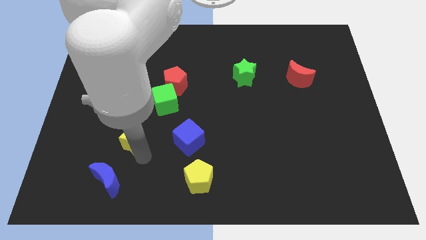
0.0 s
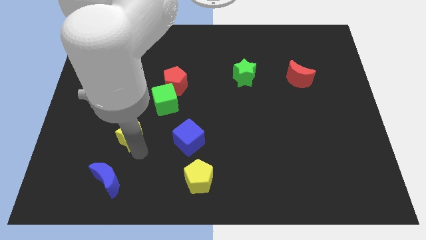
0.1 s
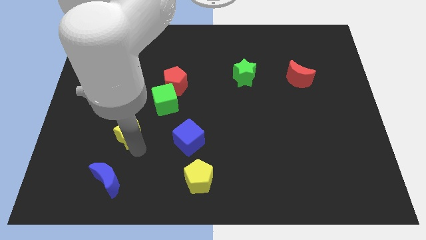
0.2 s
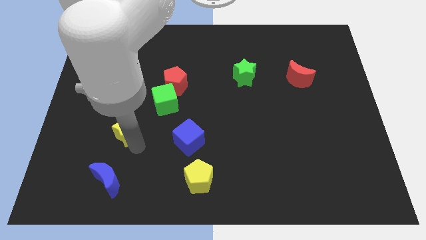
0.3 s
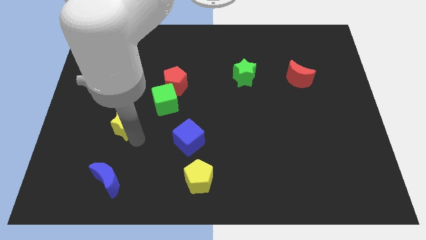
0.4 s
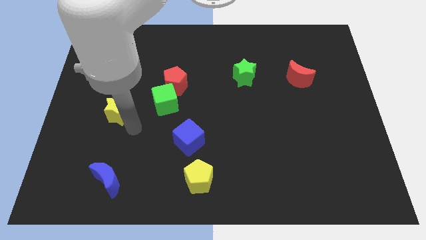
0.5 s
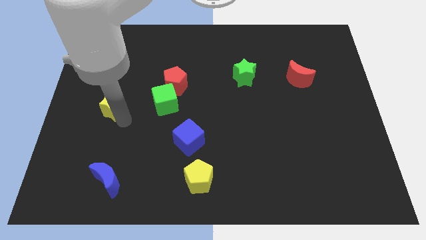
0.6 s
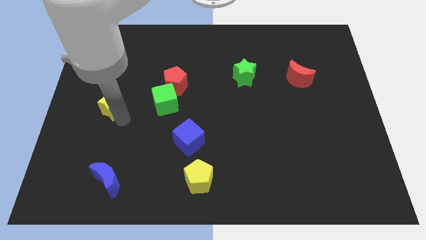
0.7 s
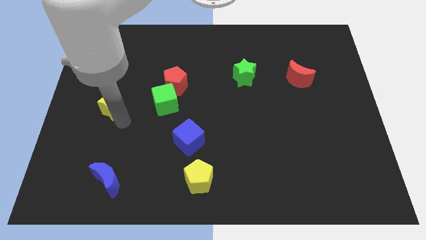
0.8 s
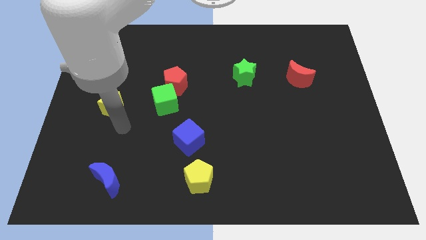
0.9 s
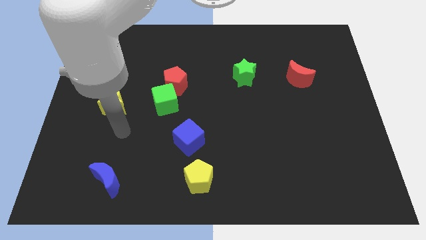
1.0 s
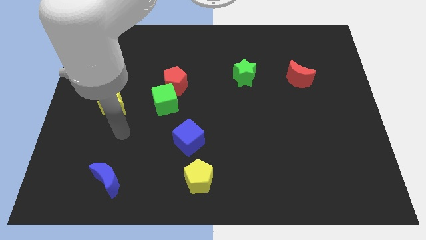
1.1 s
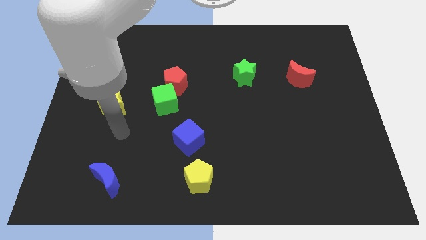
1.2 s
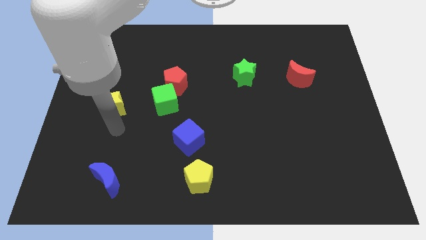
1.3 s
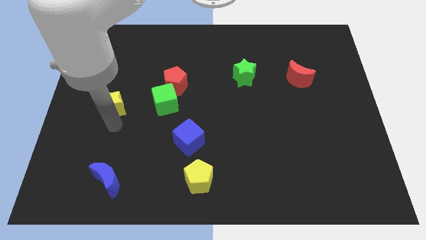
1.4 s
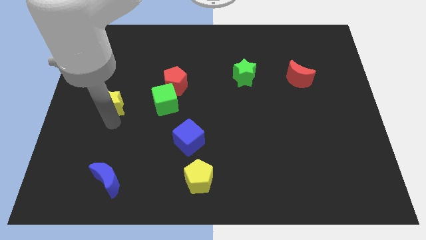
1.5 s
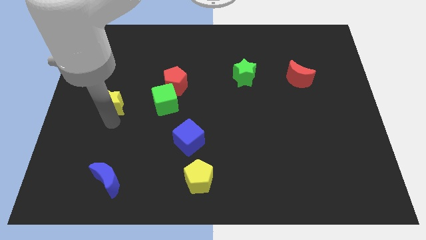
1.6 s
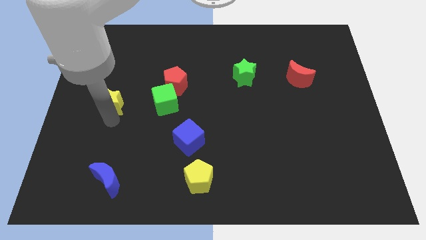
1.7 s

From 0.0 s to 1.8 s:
move yellow star to the left of green cube

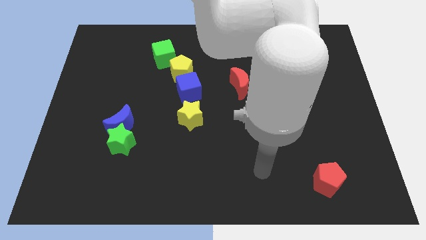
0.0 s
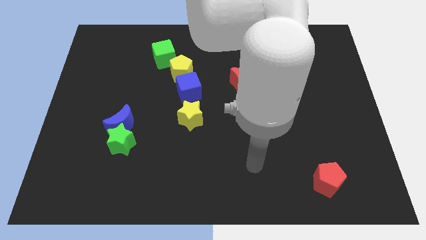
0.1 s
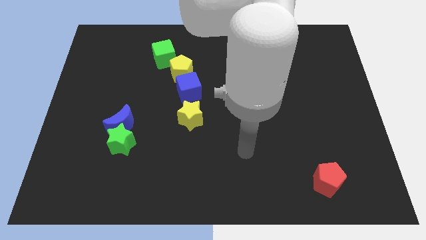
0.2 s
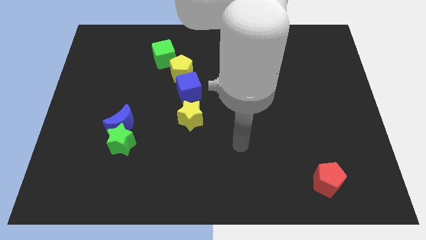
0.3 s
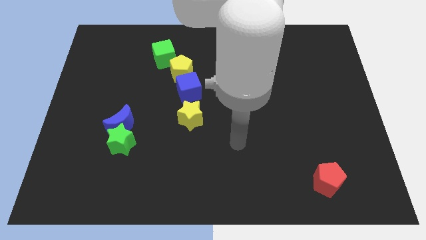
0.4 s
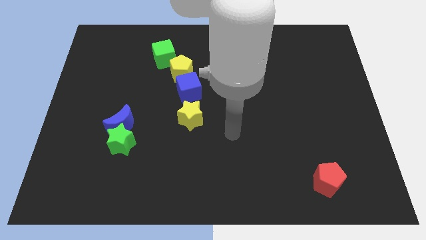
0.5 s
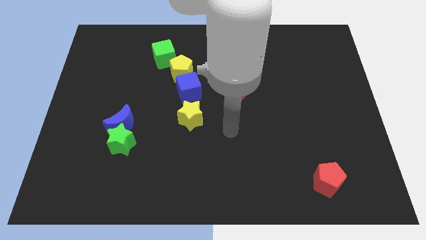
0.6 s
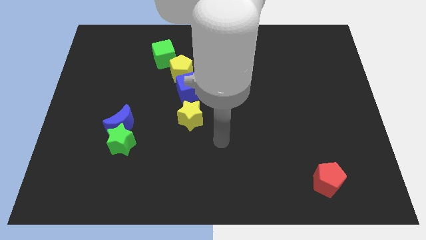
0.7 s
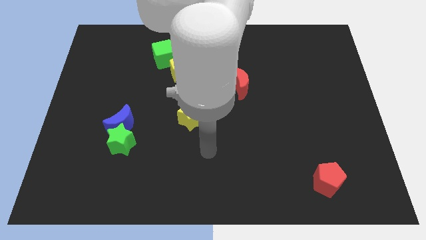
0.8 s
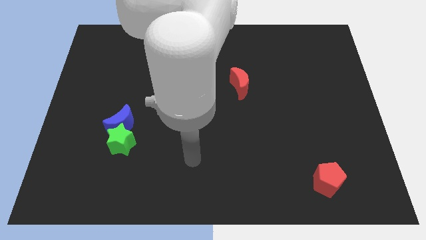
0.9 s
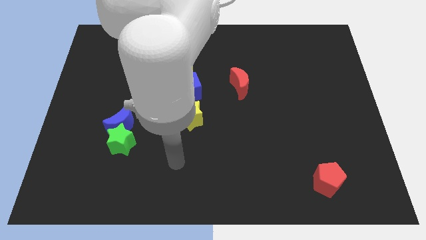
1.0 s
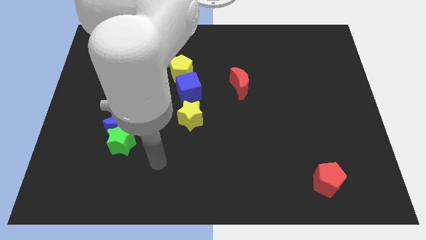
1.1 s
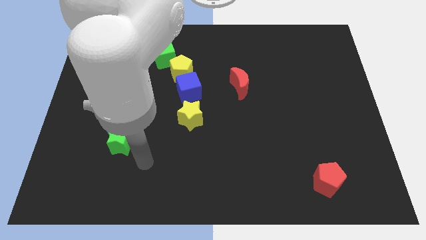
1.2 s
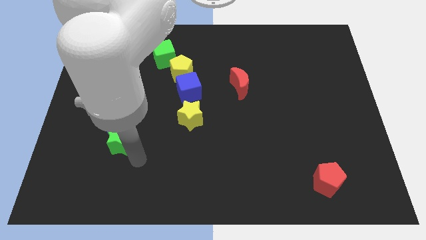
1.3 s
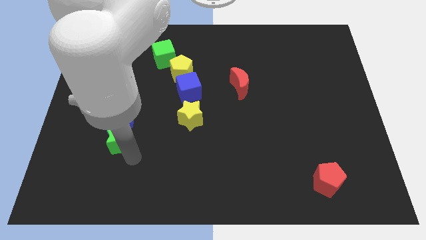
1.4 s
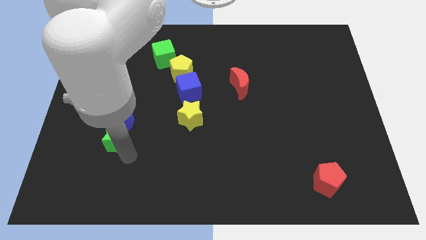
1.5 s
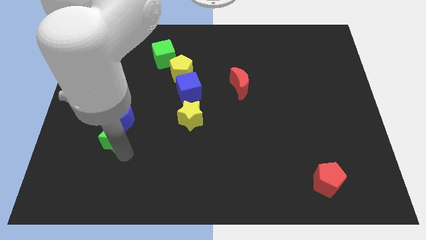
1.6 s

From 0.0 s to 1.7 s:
tap the green star

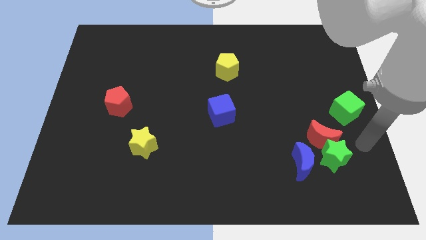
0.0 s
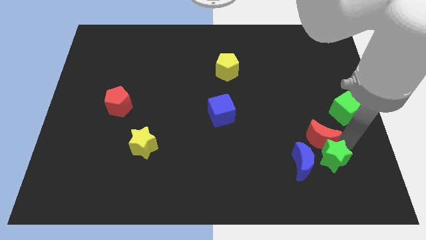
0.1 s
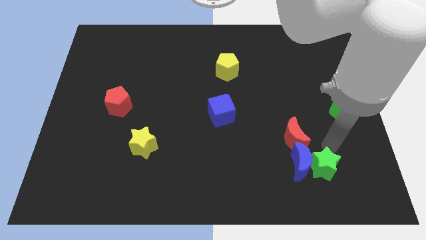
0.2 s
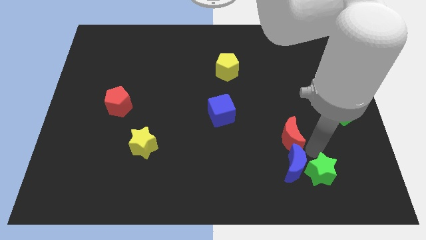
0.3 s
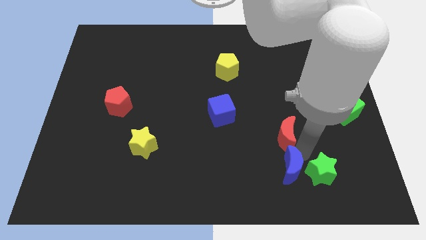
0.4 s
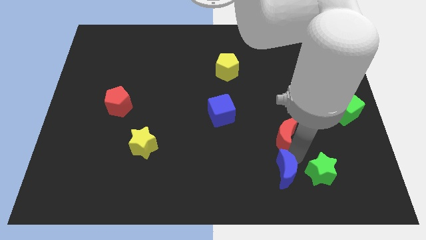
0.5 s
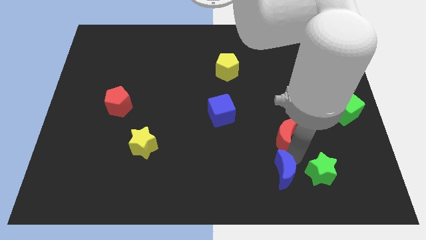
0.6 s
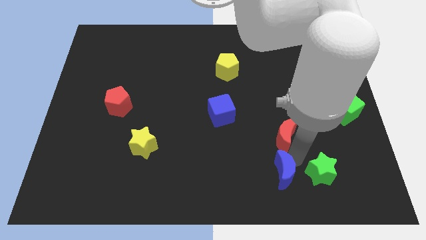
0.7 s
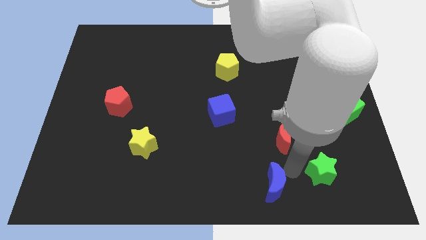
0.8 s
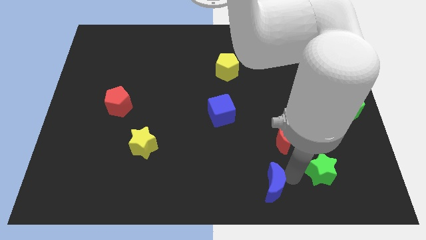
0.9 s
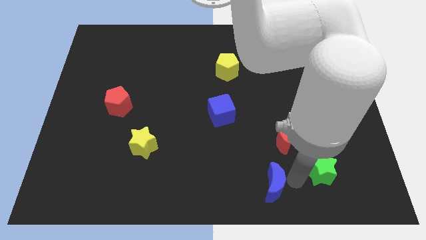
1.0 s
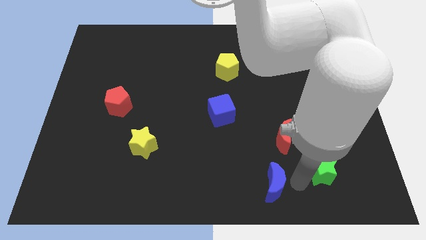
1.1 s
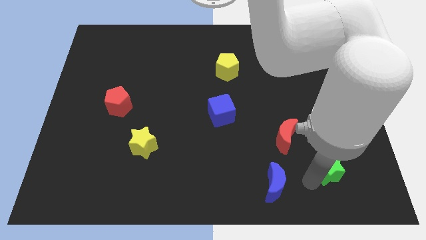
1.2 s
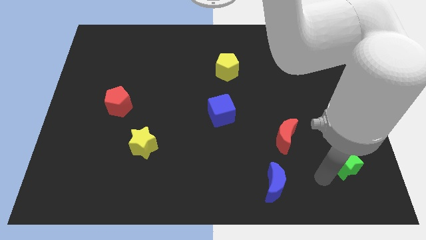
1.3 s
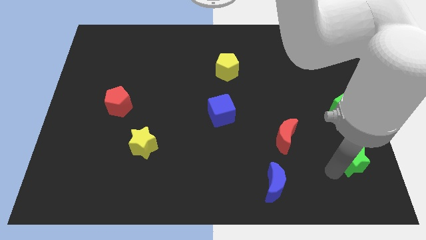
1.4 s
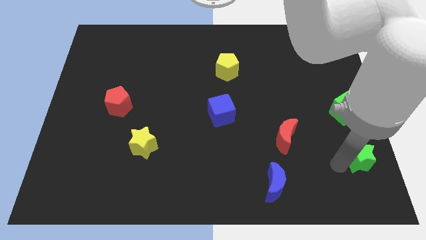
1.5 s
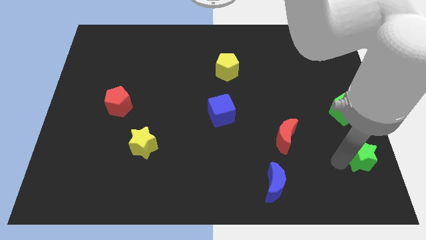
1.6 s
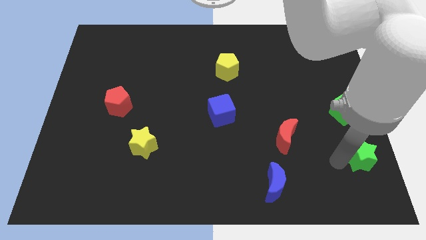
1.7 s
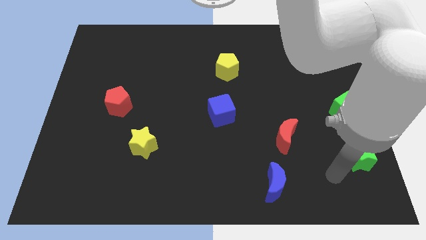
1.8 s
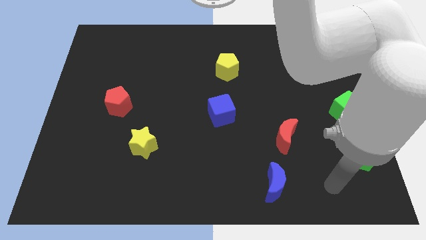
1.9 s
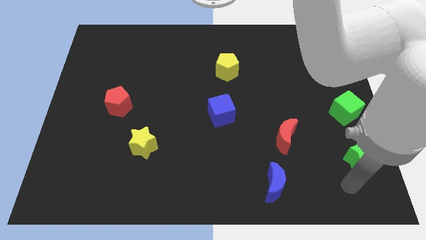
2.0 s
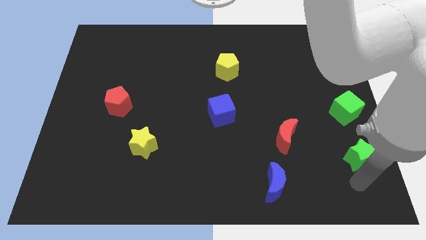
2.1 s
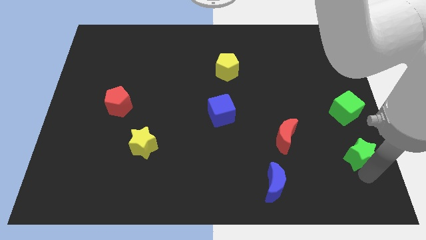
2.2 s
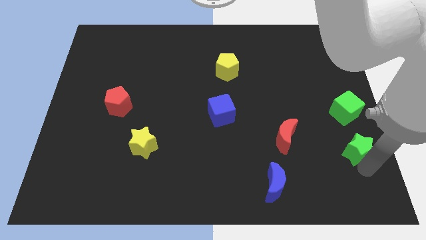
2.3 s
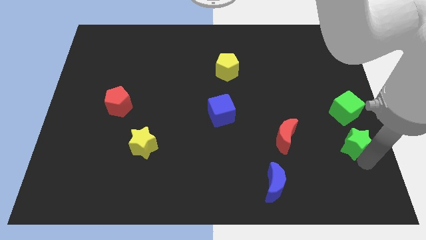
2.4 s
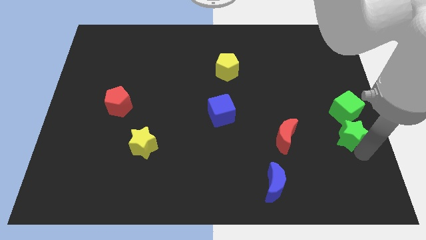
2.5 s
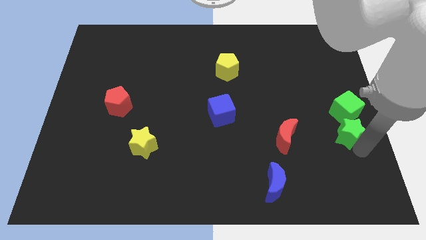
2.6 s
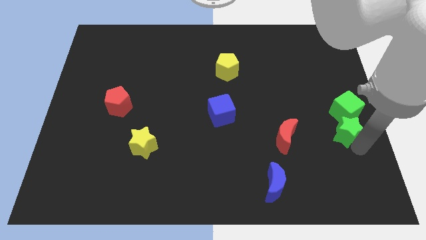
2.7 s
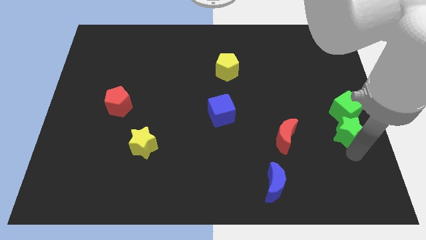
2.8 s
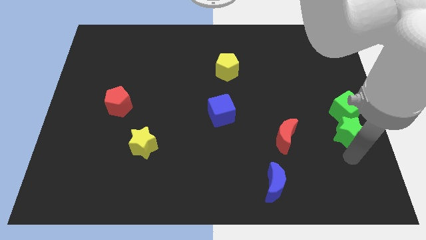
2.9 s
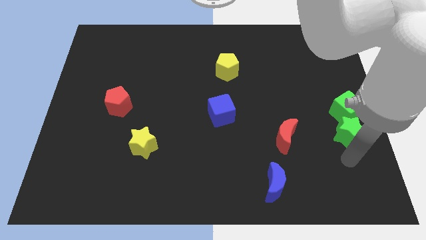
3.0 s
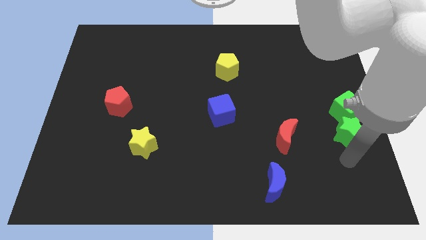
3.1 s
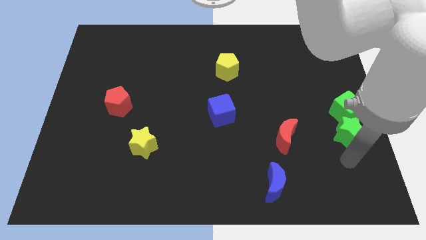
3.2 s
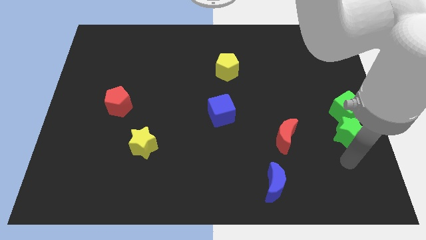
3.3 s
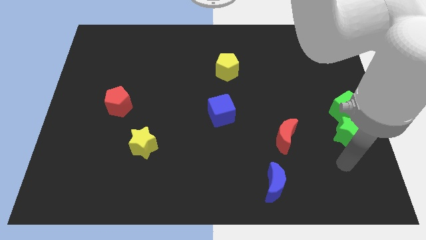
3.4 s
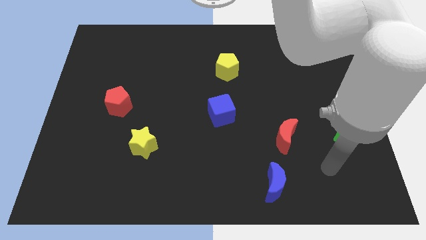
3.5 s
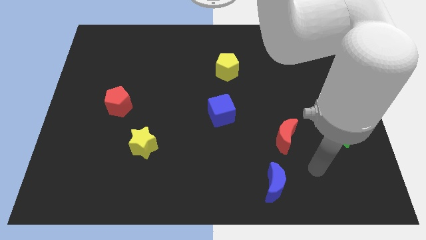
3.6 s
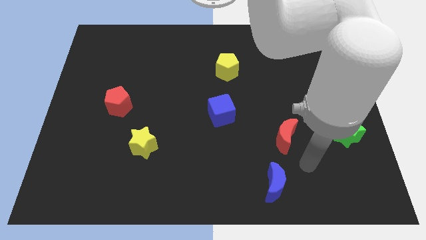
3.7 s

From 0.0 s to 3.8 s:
push green star below green cube

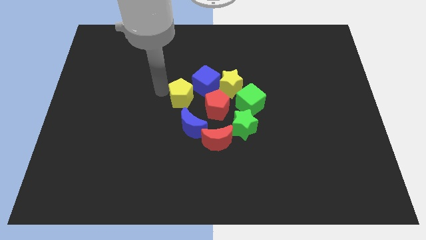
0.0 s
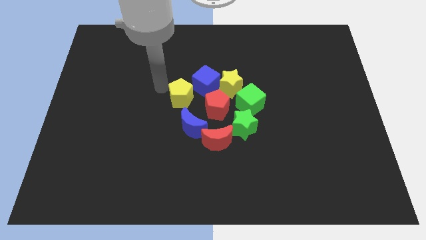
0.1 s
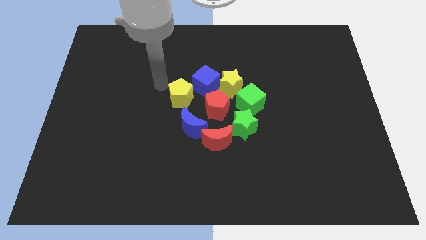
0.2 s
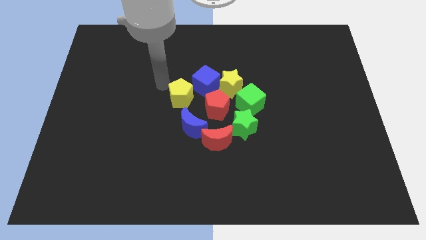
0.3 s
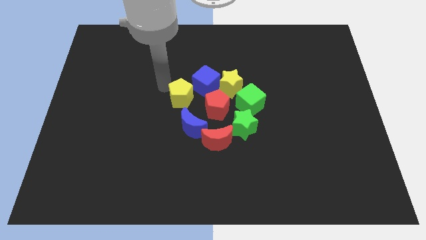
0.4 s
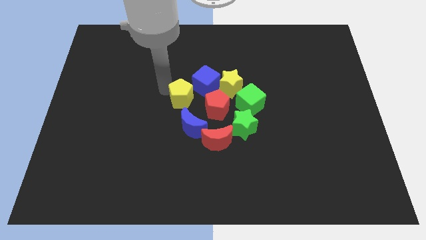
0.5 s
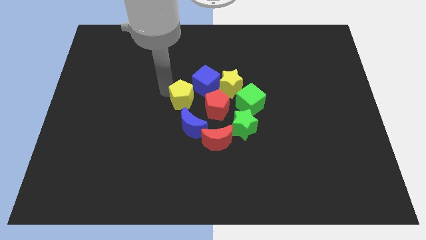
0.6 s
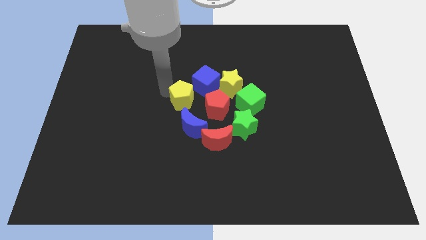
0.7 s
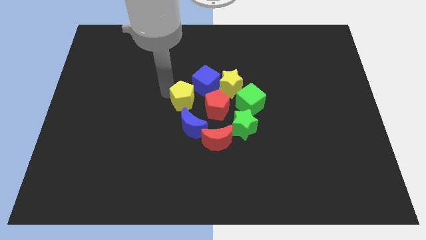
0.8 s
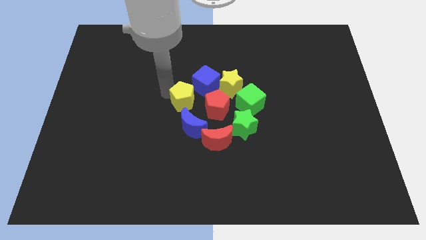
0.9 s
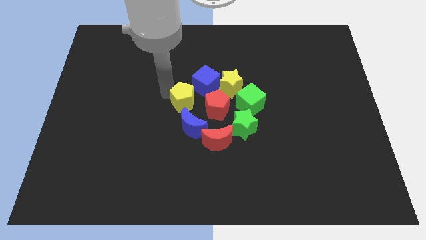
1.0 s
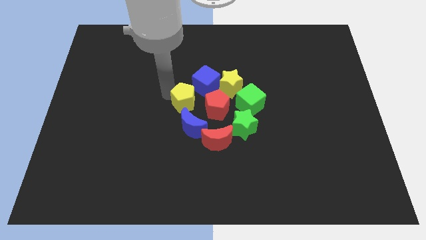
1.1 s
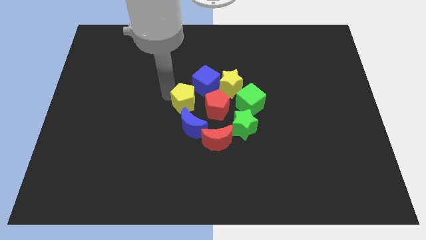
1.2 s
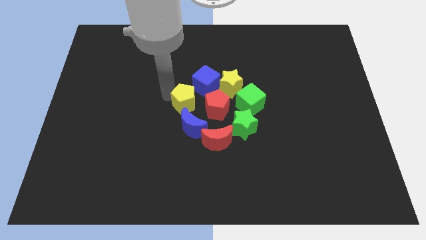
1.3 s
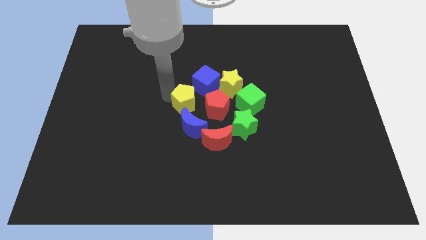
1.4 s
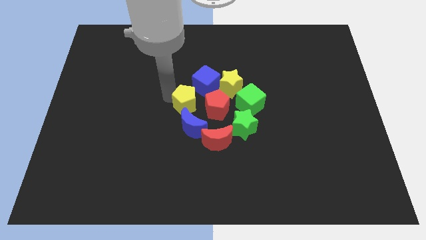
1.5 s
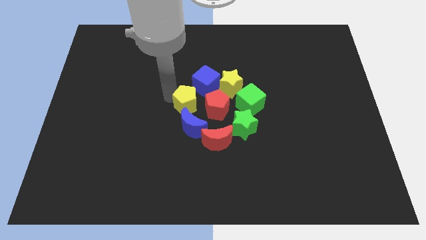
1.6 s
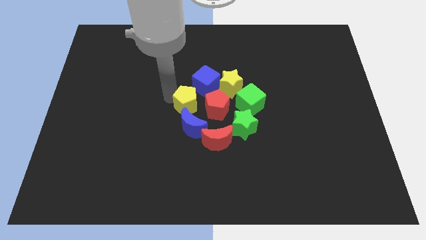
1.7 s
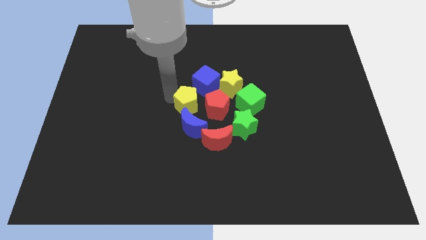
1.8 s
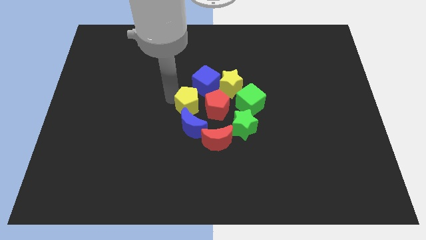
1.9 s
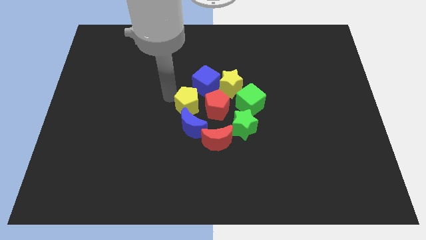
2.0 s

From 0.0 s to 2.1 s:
move the yellow pentagon to the left side of the red pentagon
